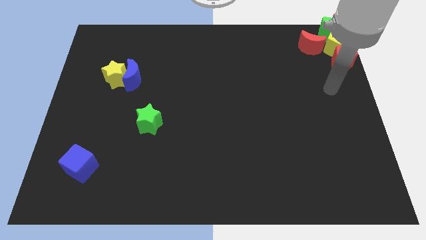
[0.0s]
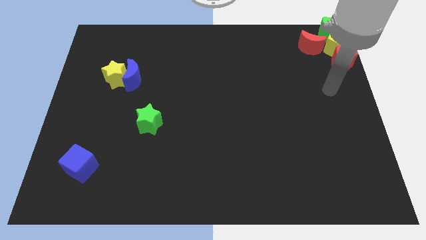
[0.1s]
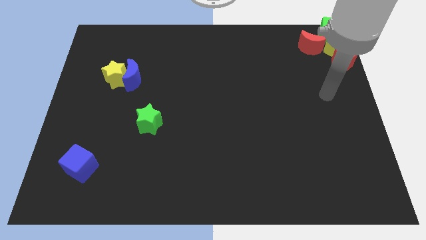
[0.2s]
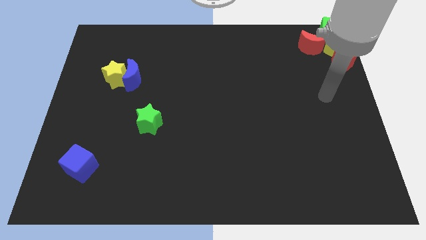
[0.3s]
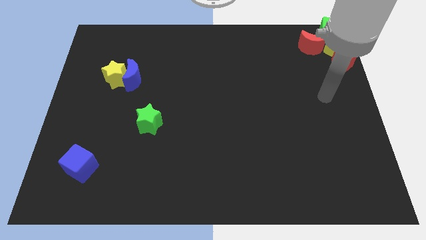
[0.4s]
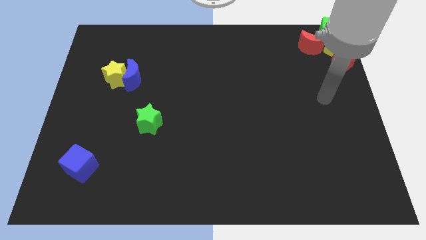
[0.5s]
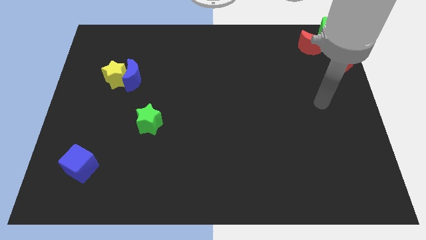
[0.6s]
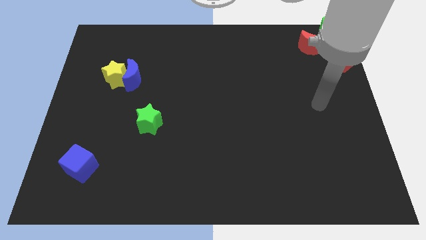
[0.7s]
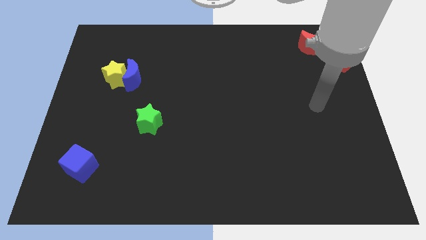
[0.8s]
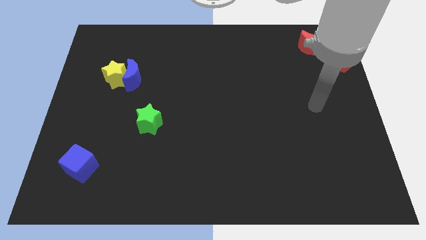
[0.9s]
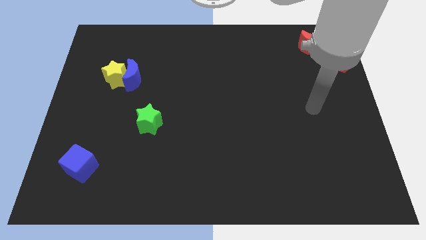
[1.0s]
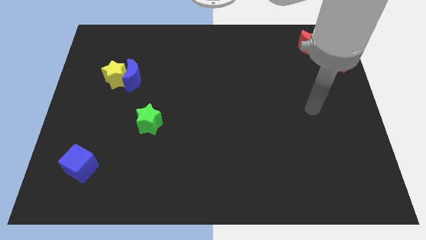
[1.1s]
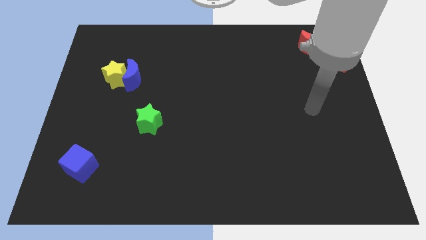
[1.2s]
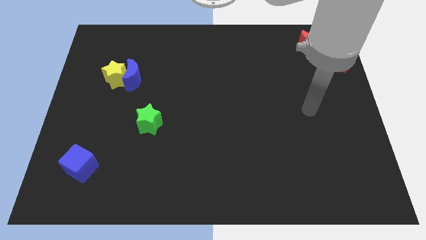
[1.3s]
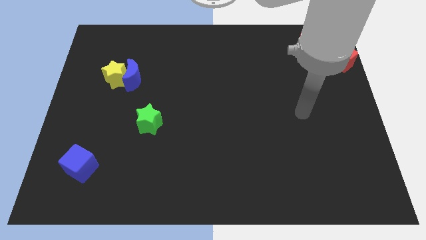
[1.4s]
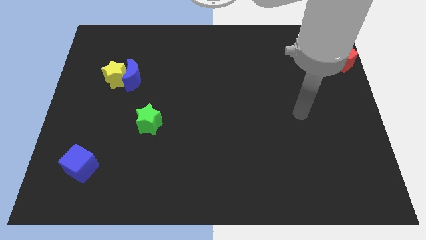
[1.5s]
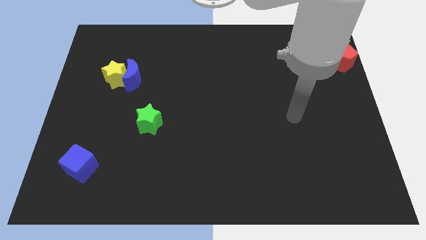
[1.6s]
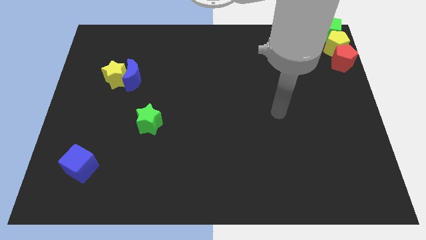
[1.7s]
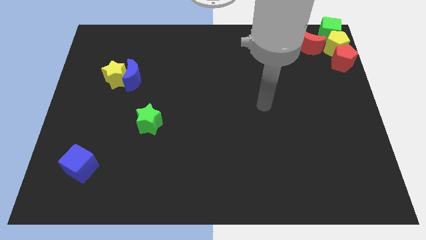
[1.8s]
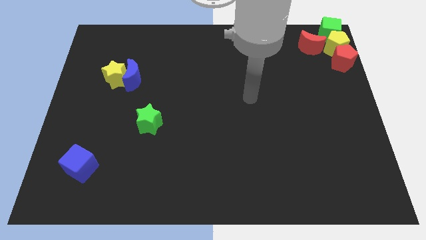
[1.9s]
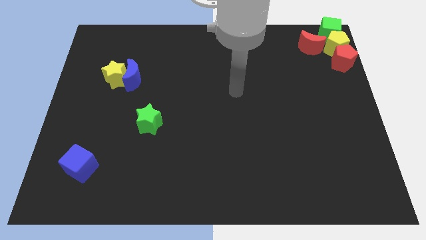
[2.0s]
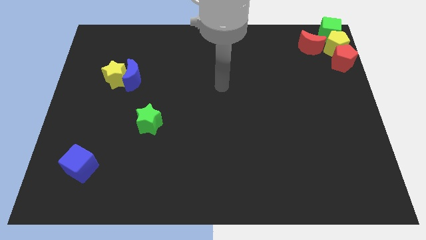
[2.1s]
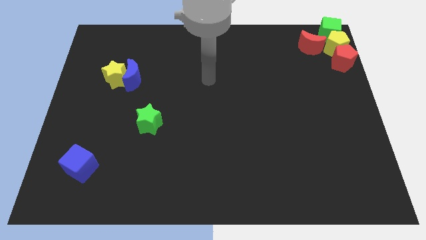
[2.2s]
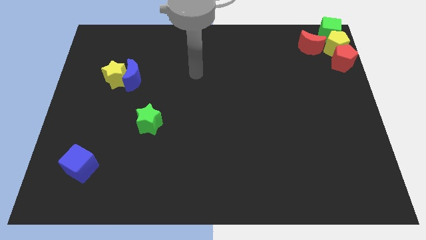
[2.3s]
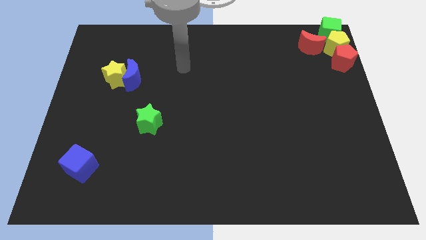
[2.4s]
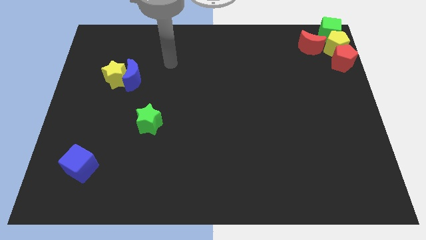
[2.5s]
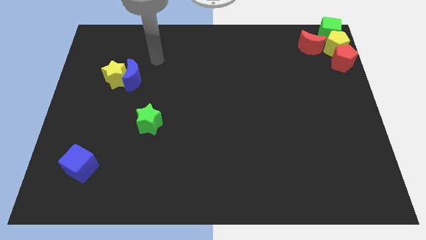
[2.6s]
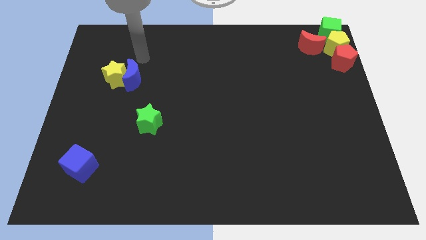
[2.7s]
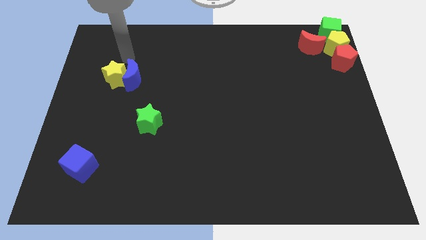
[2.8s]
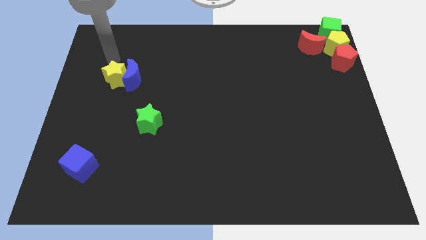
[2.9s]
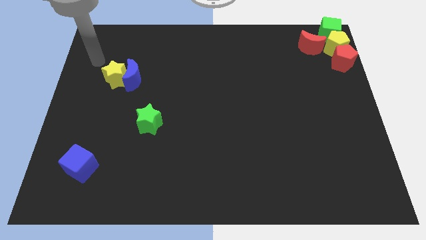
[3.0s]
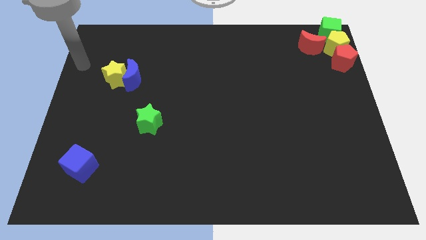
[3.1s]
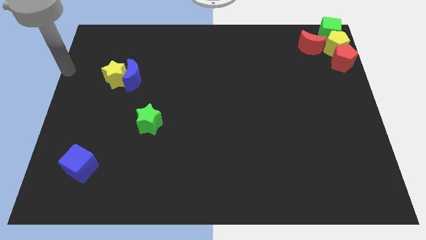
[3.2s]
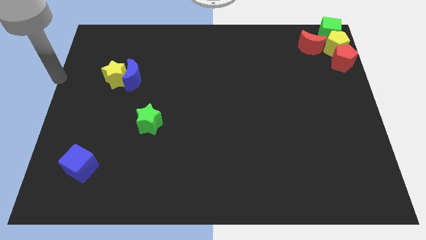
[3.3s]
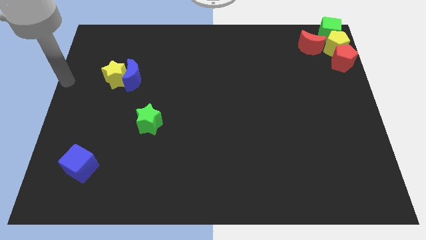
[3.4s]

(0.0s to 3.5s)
go and point your hand at the left of the yellow star

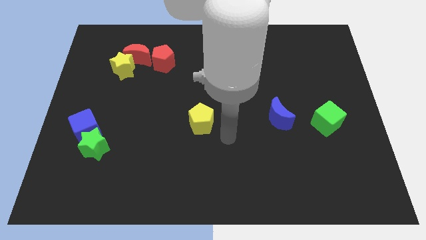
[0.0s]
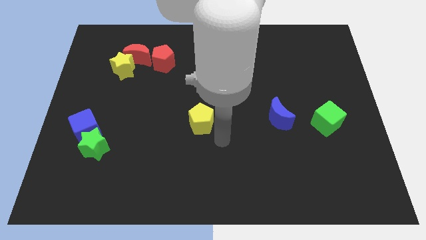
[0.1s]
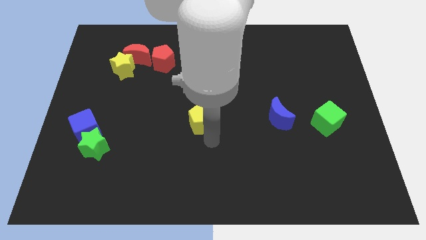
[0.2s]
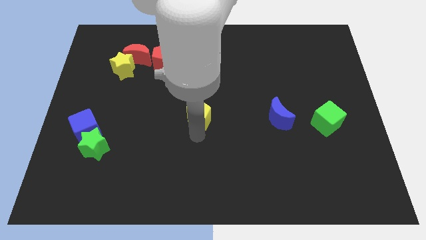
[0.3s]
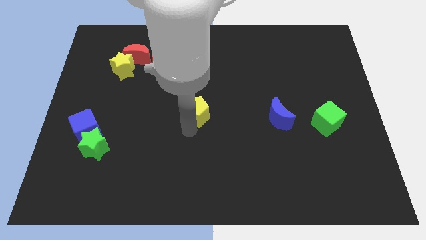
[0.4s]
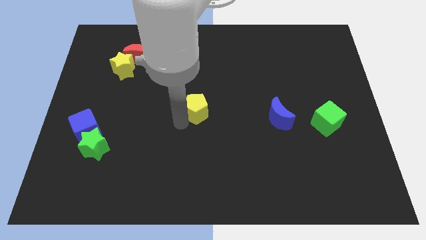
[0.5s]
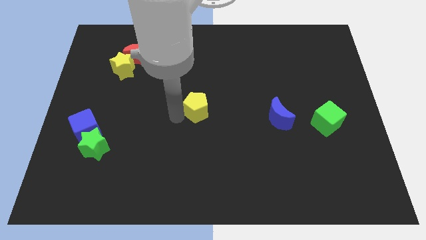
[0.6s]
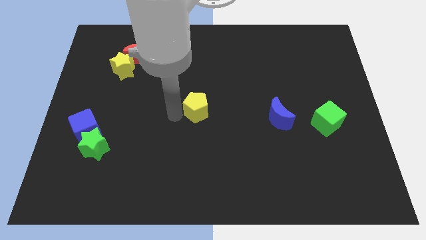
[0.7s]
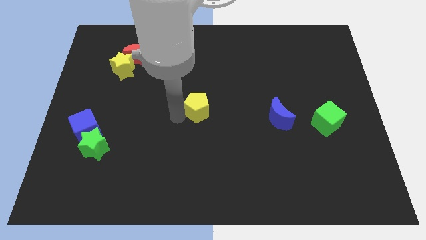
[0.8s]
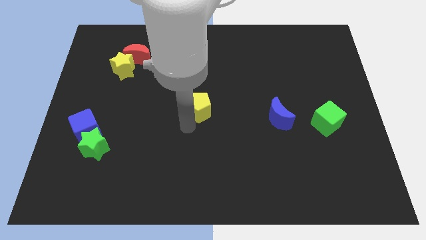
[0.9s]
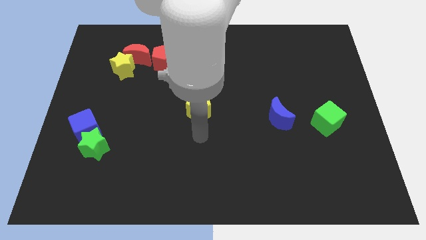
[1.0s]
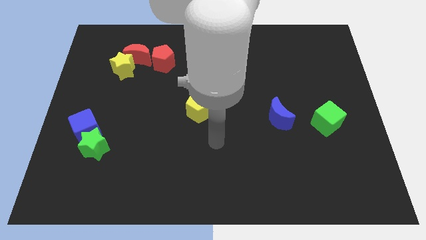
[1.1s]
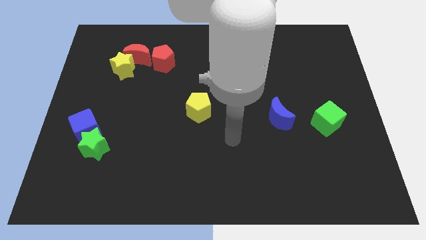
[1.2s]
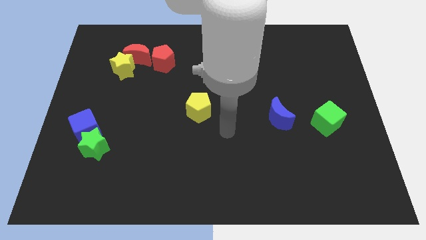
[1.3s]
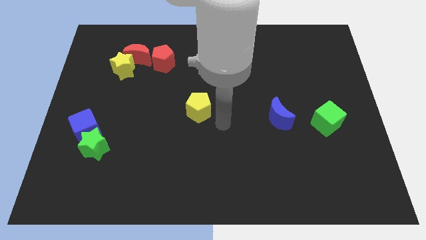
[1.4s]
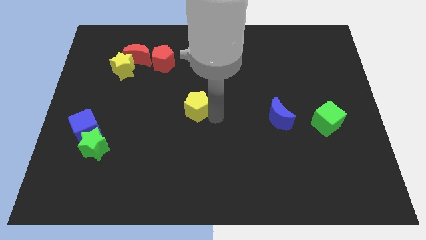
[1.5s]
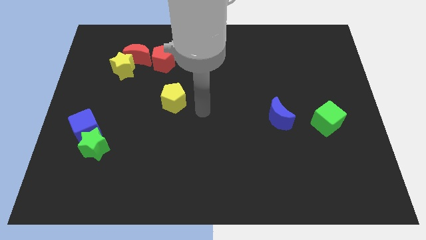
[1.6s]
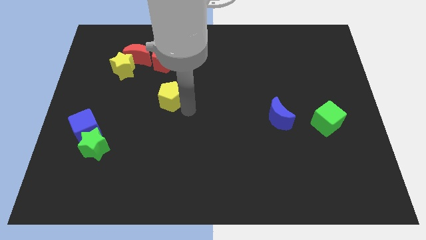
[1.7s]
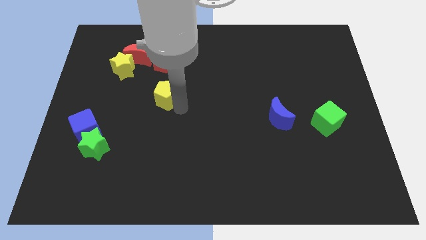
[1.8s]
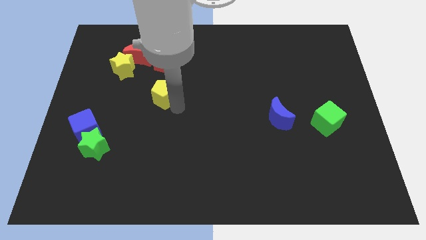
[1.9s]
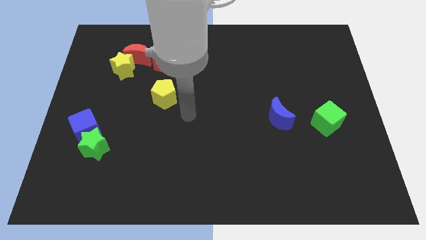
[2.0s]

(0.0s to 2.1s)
put the yellow pentagon vertically below the red pentagon

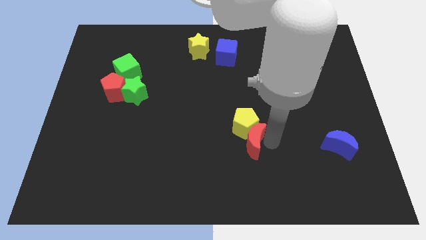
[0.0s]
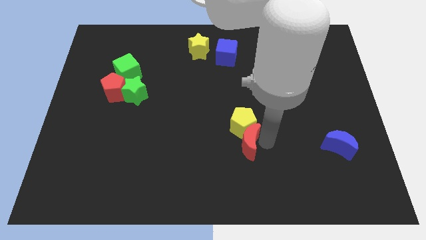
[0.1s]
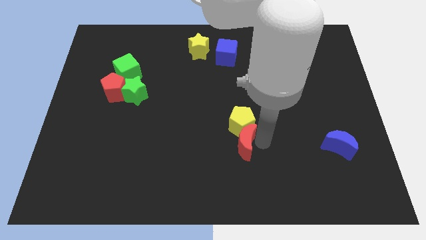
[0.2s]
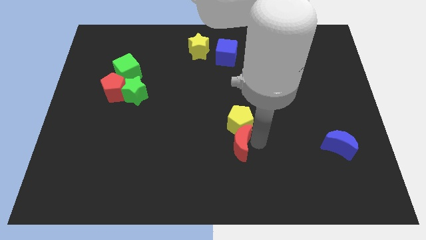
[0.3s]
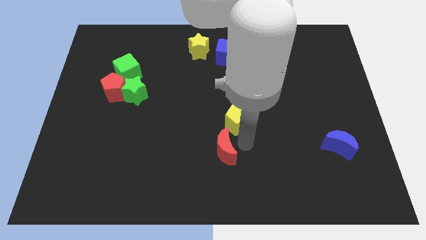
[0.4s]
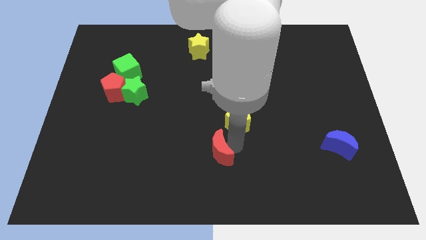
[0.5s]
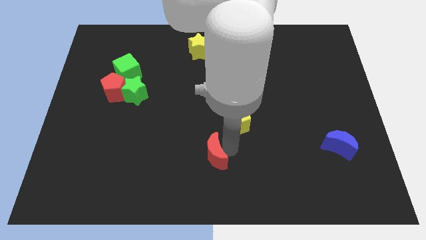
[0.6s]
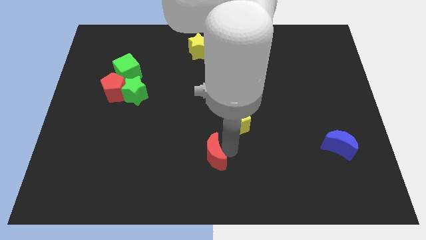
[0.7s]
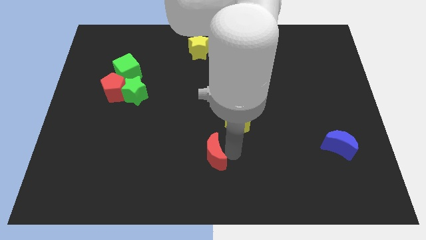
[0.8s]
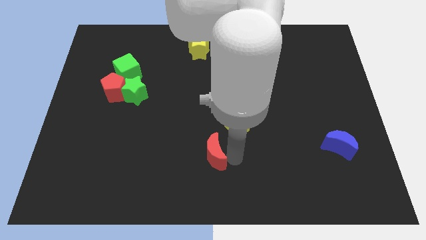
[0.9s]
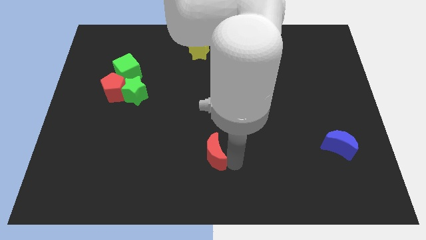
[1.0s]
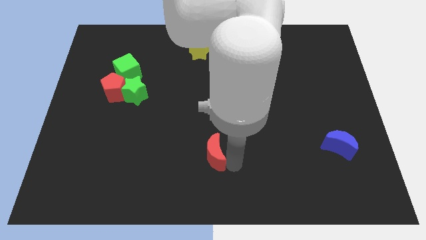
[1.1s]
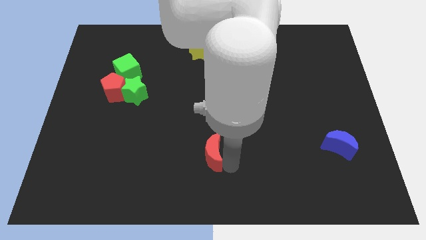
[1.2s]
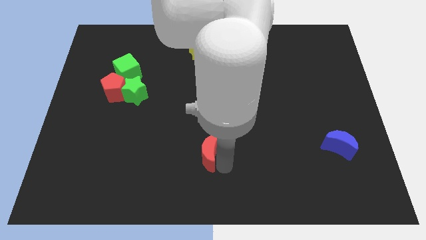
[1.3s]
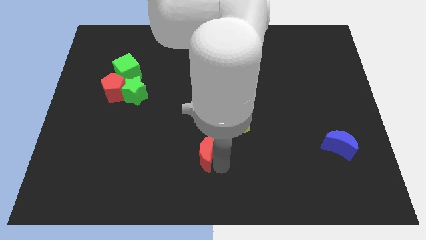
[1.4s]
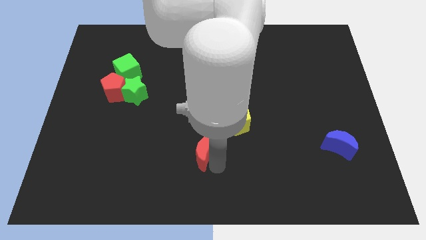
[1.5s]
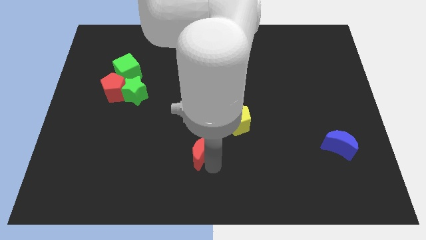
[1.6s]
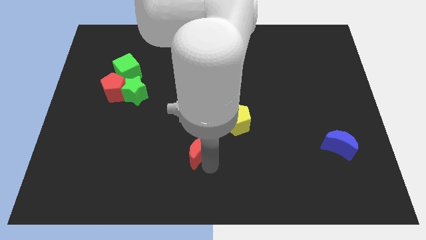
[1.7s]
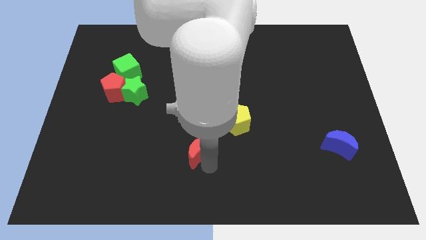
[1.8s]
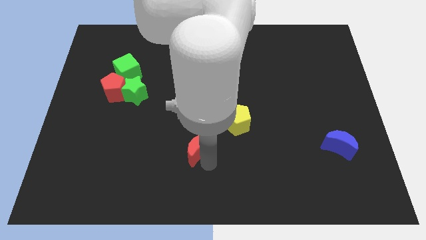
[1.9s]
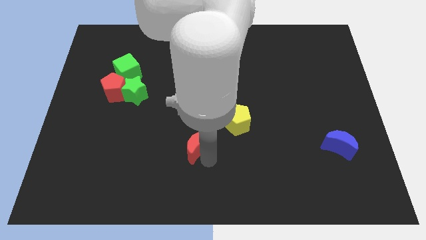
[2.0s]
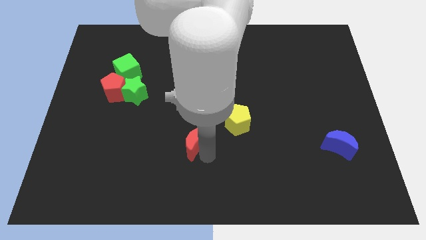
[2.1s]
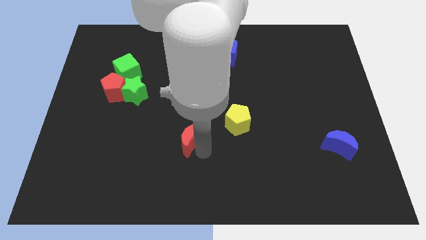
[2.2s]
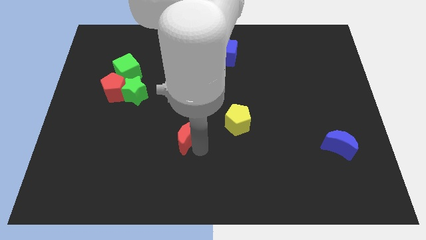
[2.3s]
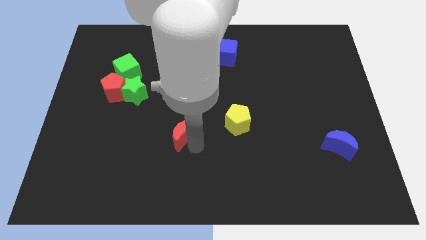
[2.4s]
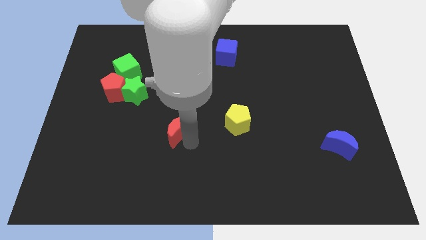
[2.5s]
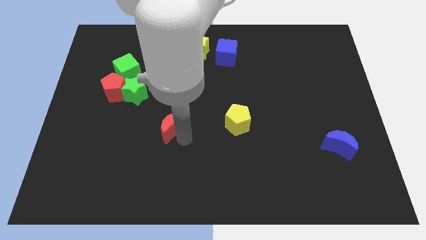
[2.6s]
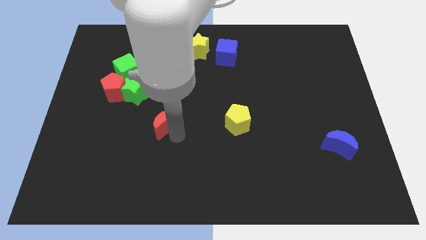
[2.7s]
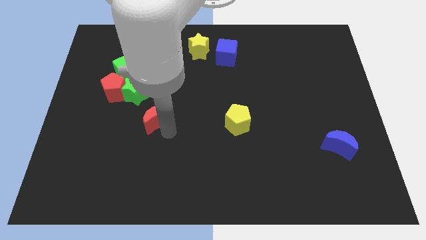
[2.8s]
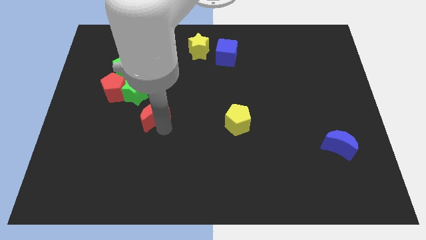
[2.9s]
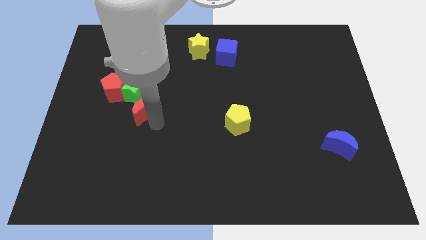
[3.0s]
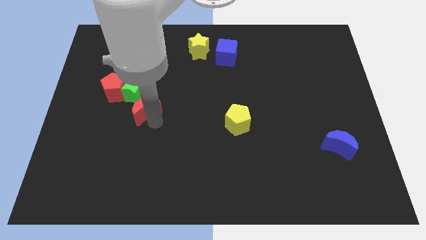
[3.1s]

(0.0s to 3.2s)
separate yellow pentagon and red moon

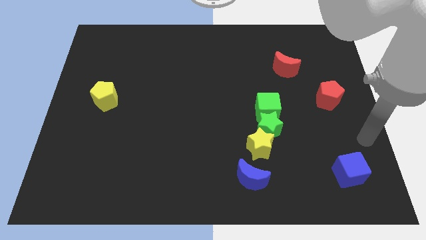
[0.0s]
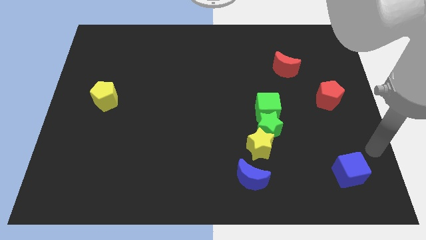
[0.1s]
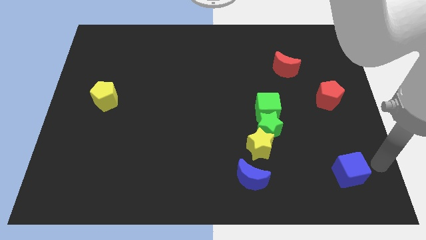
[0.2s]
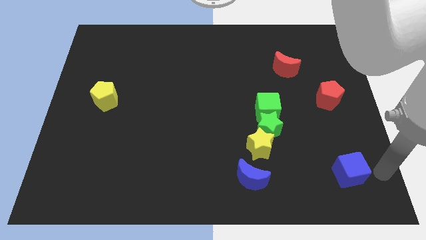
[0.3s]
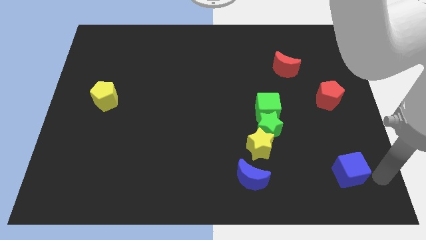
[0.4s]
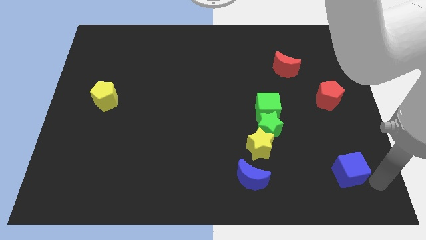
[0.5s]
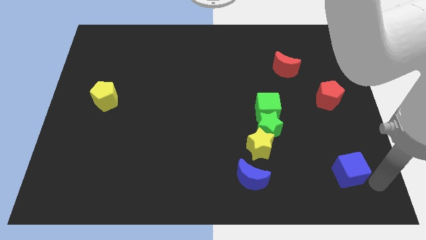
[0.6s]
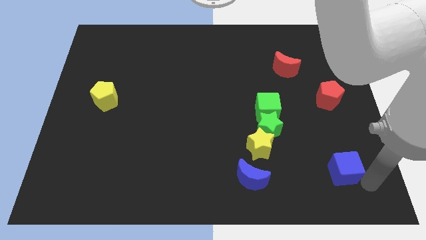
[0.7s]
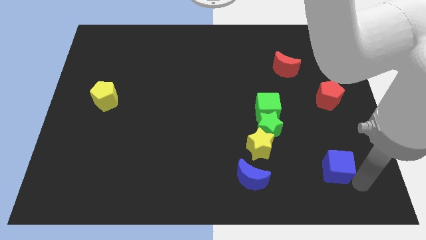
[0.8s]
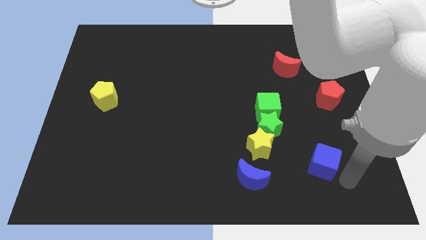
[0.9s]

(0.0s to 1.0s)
touch the bottom of blue cube
